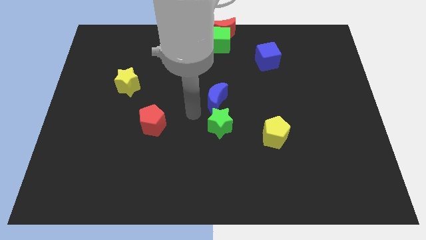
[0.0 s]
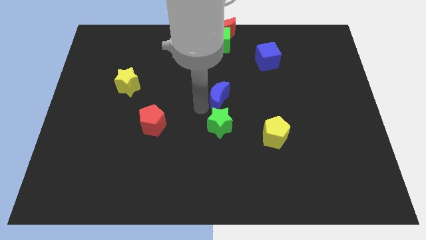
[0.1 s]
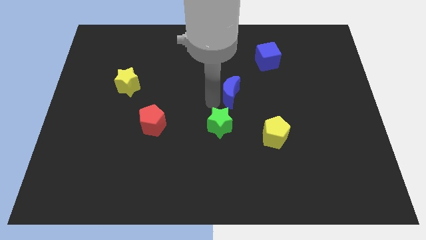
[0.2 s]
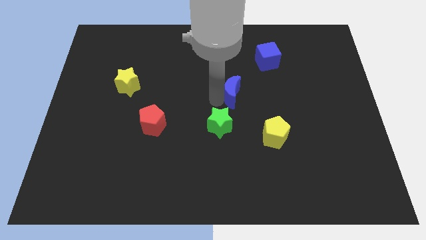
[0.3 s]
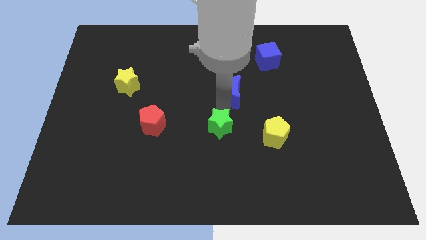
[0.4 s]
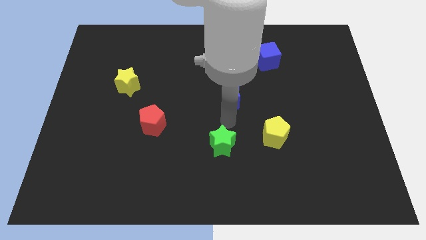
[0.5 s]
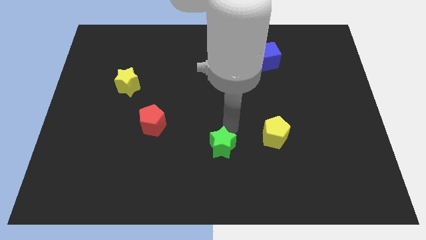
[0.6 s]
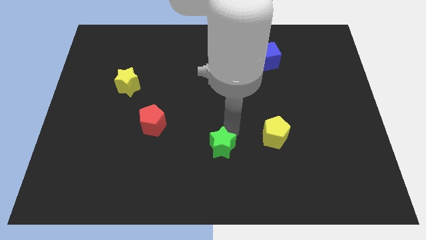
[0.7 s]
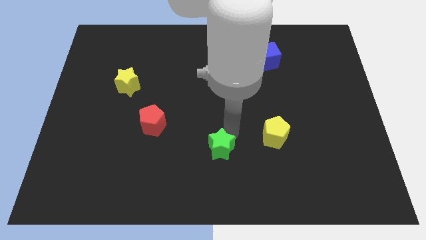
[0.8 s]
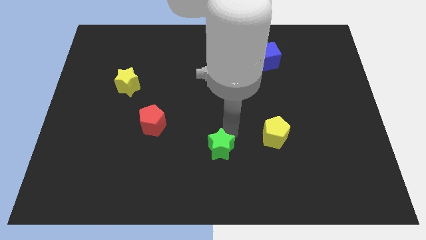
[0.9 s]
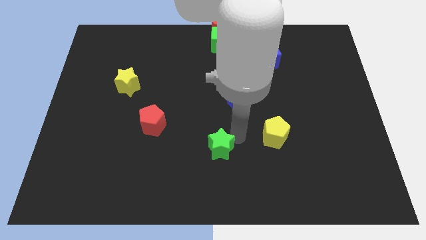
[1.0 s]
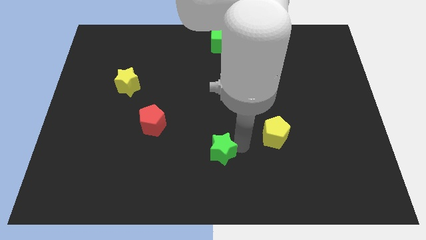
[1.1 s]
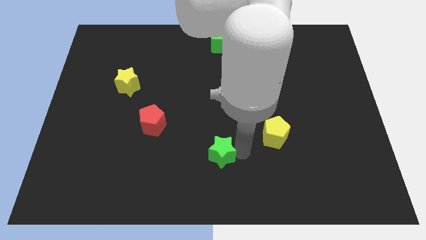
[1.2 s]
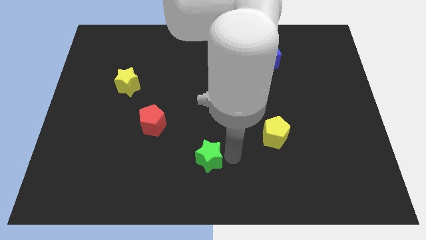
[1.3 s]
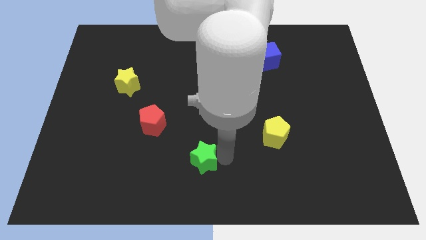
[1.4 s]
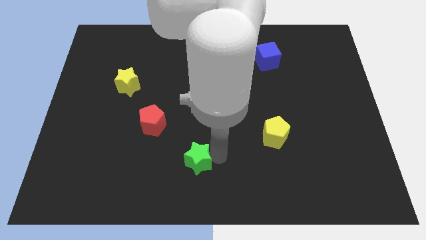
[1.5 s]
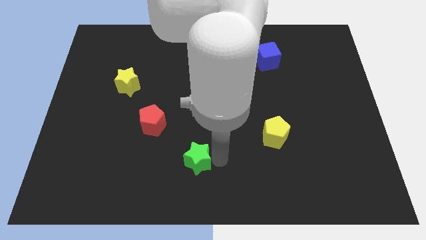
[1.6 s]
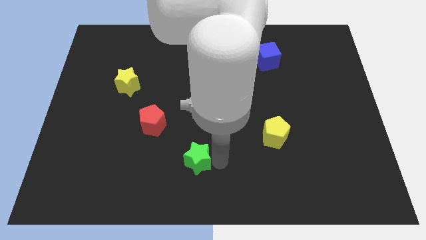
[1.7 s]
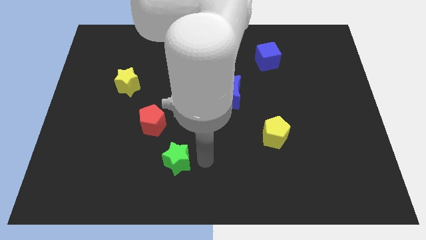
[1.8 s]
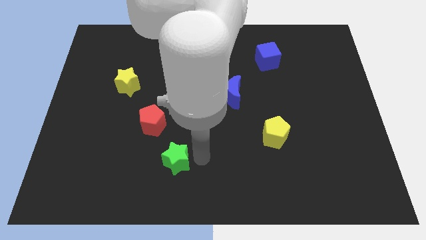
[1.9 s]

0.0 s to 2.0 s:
separate green star and the blue moon

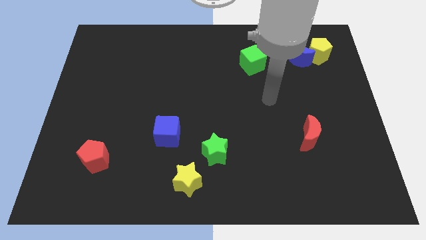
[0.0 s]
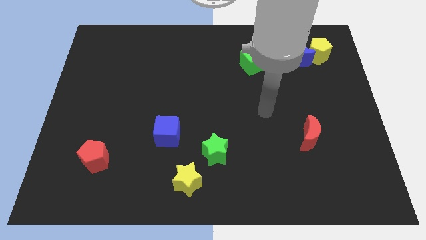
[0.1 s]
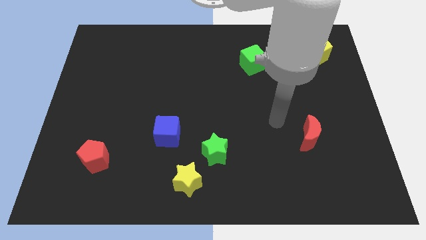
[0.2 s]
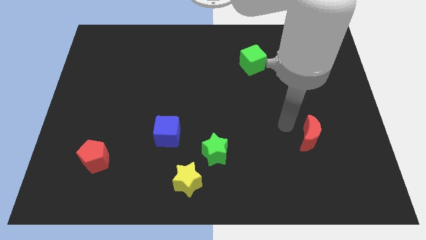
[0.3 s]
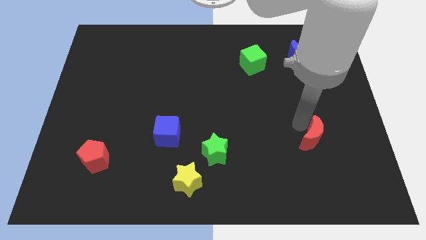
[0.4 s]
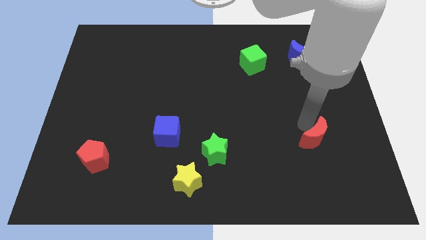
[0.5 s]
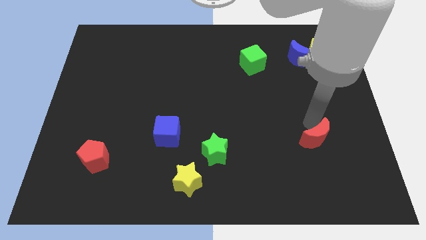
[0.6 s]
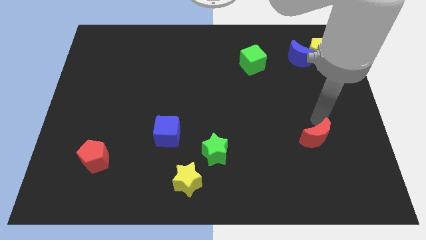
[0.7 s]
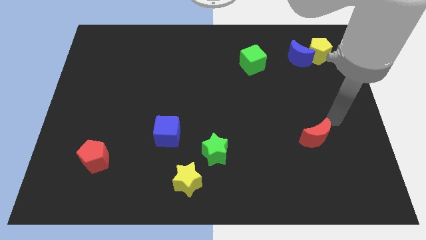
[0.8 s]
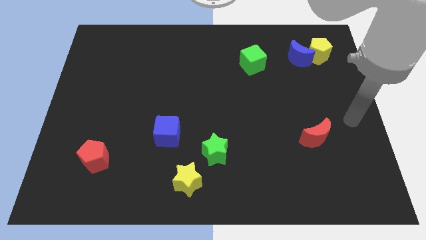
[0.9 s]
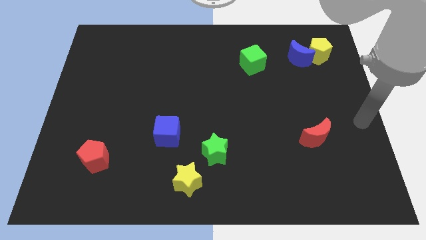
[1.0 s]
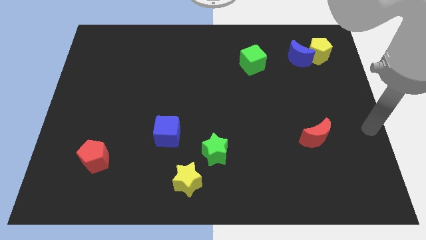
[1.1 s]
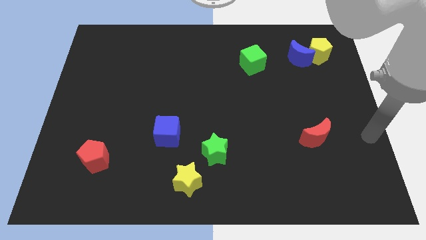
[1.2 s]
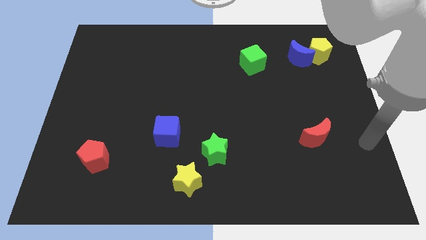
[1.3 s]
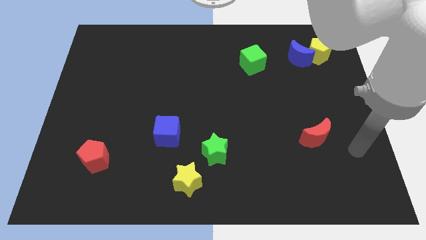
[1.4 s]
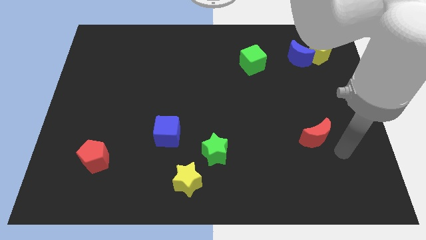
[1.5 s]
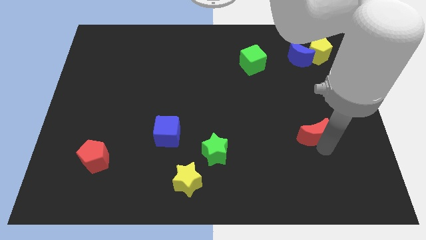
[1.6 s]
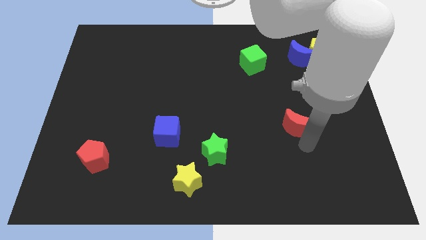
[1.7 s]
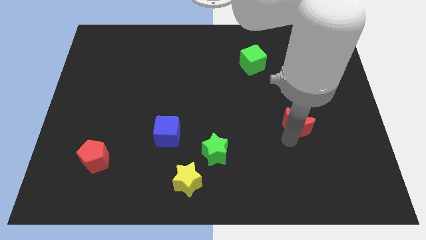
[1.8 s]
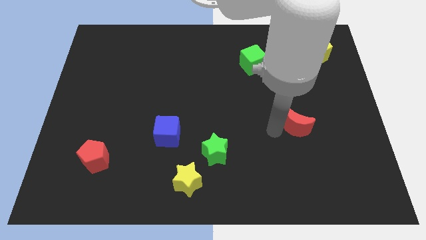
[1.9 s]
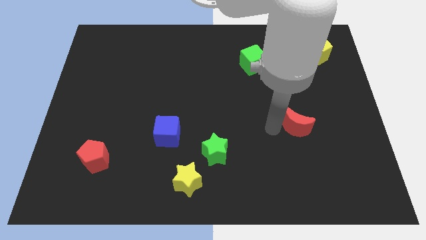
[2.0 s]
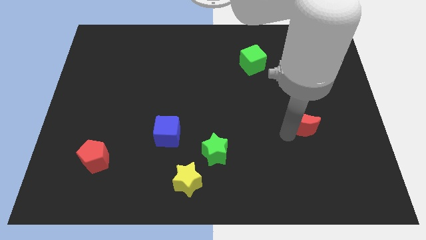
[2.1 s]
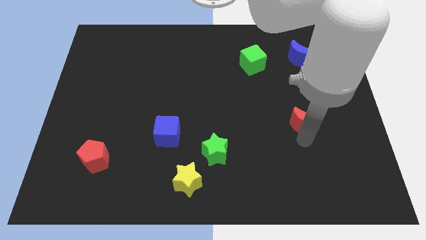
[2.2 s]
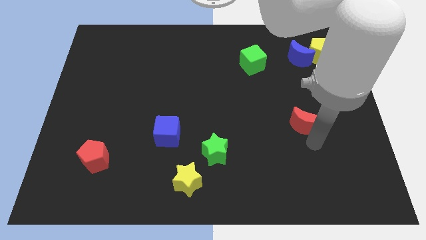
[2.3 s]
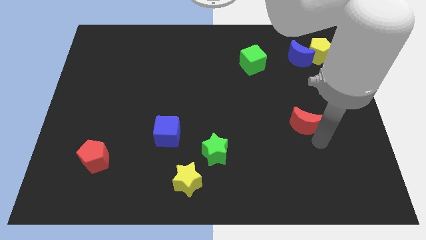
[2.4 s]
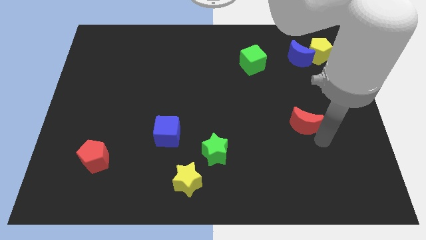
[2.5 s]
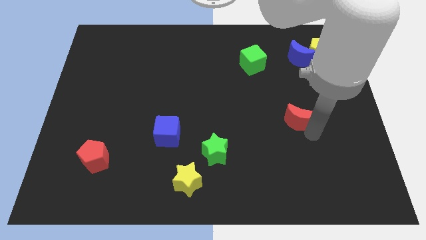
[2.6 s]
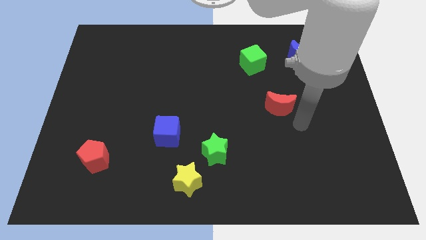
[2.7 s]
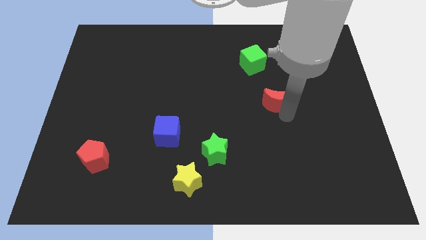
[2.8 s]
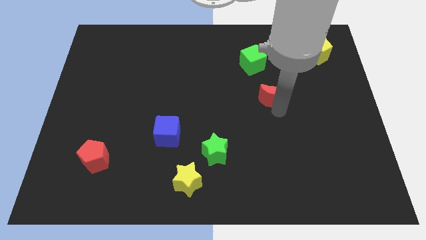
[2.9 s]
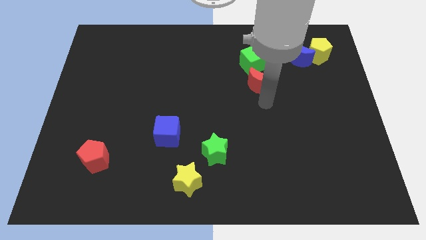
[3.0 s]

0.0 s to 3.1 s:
place the red moon diagonally bottom left to the blue moon

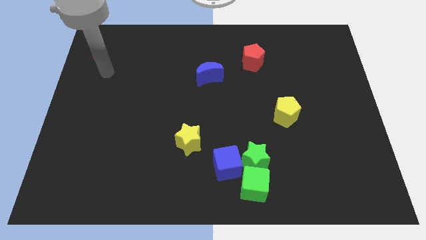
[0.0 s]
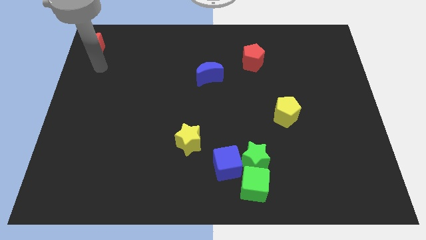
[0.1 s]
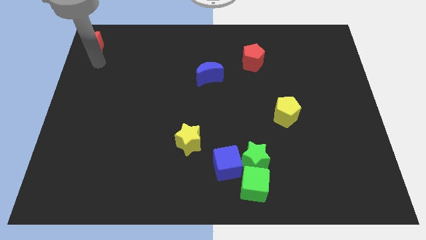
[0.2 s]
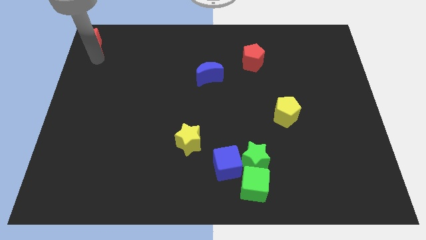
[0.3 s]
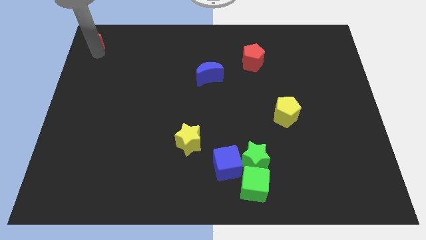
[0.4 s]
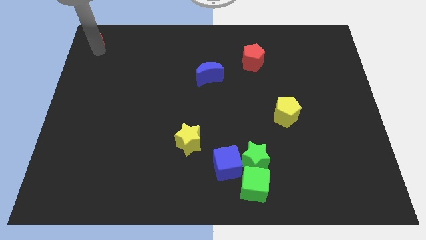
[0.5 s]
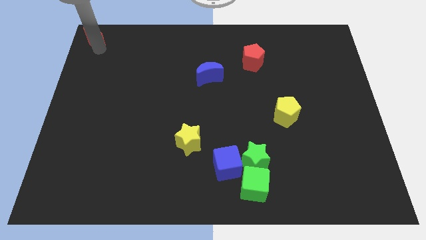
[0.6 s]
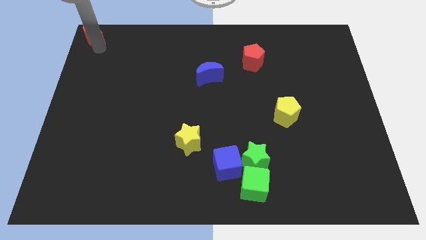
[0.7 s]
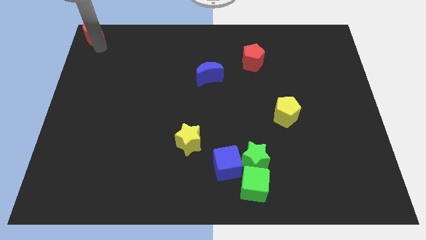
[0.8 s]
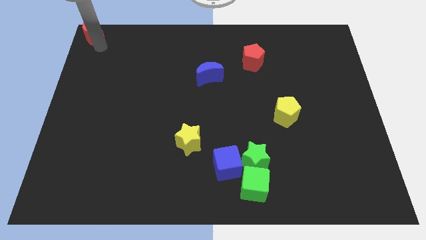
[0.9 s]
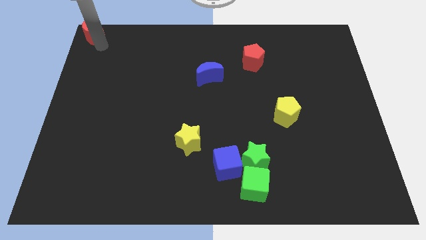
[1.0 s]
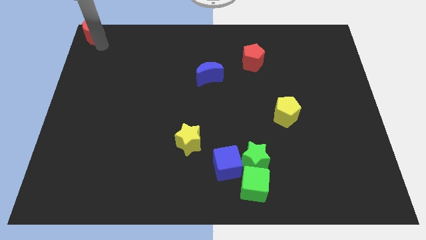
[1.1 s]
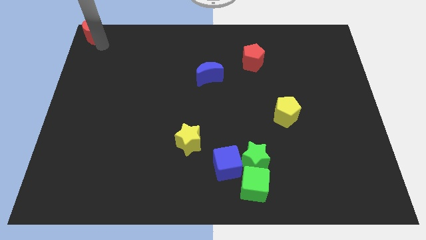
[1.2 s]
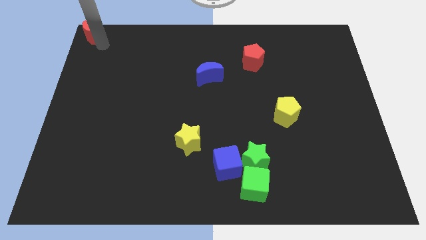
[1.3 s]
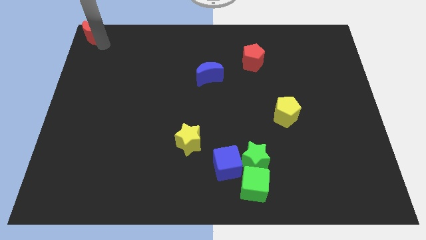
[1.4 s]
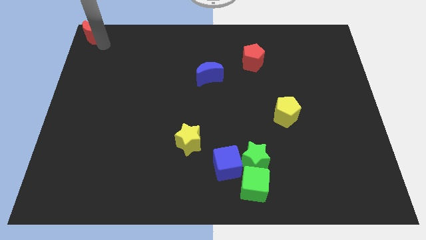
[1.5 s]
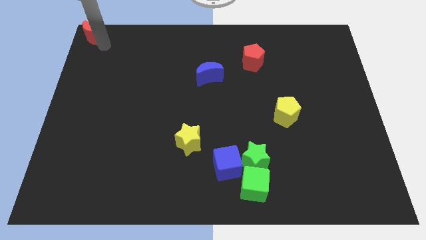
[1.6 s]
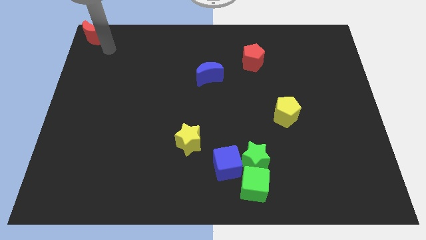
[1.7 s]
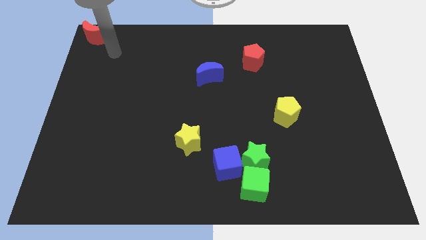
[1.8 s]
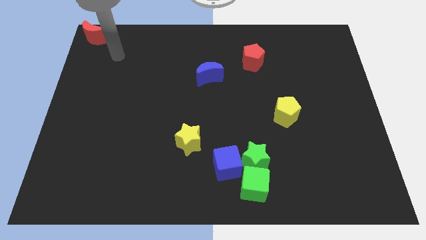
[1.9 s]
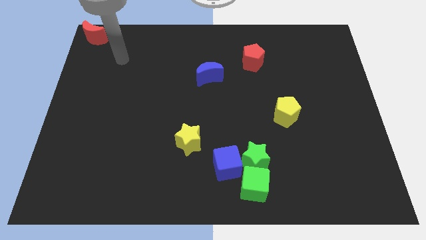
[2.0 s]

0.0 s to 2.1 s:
place red moon in the top left corner

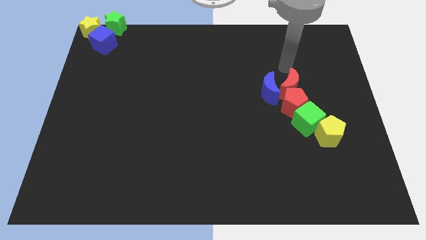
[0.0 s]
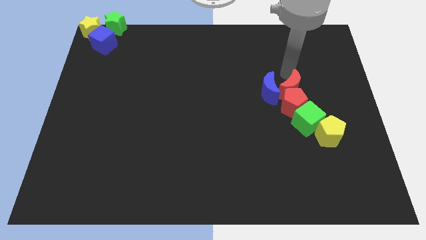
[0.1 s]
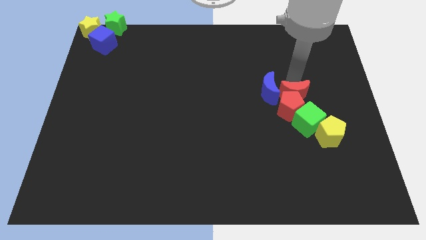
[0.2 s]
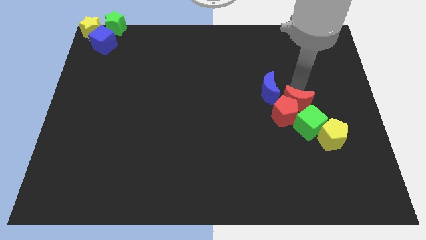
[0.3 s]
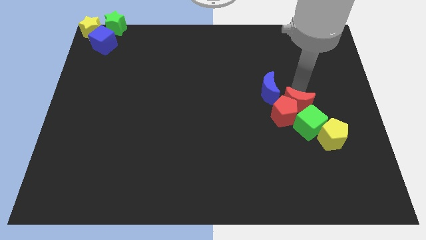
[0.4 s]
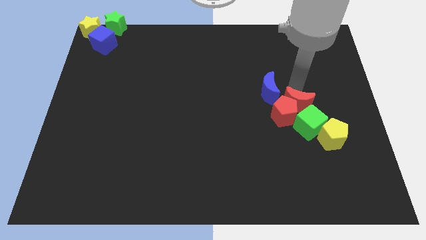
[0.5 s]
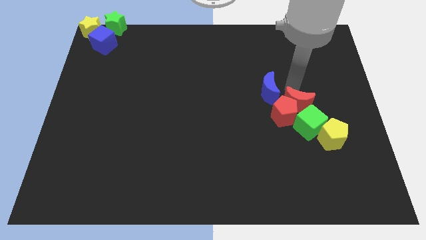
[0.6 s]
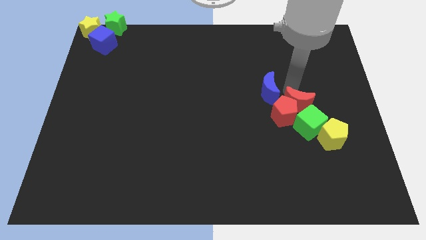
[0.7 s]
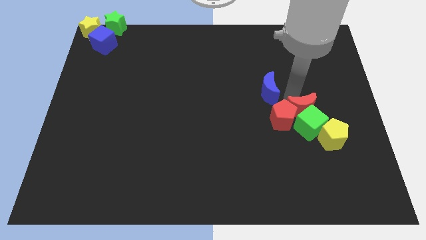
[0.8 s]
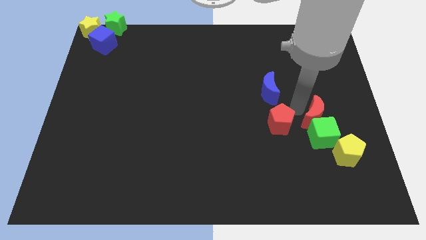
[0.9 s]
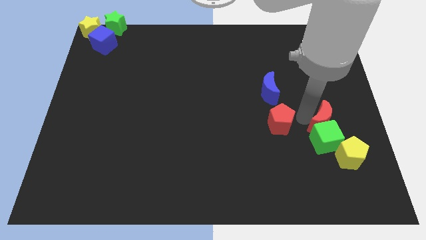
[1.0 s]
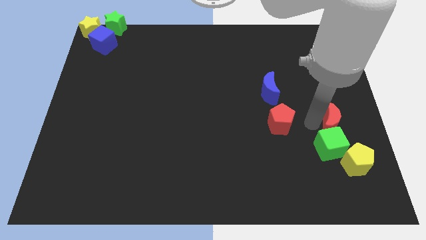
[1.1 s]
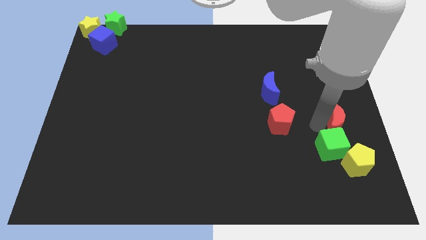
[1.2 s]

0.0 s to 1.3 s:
push red moon to the top of the green cube

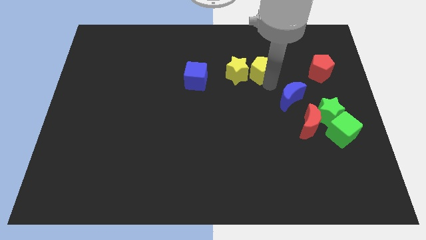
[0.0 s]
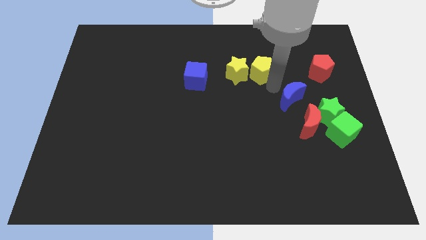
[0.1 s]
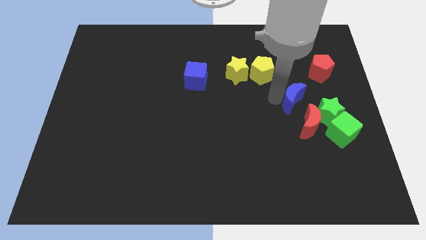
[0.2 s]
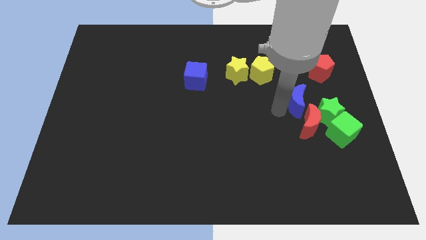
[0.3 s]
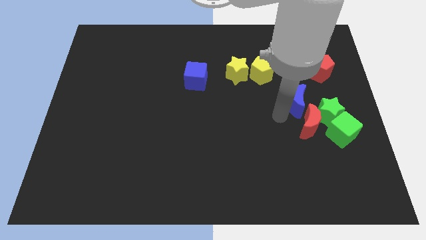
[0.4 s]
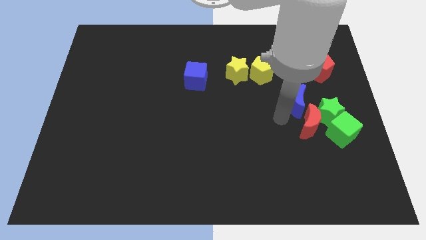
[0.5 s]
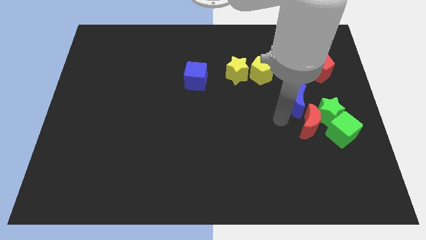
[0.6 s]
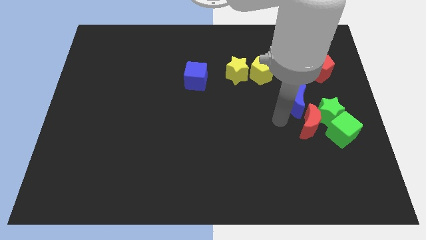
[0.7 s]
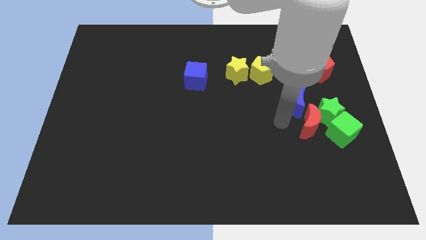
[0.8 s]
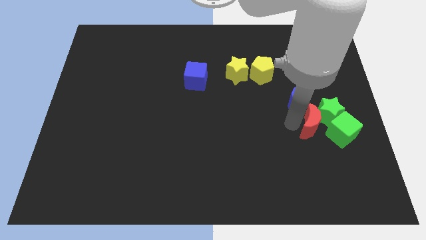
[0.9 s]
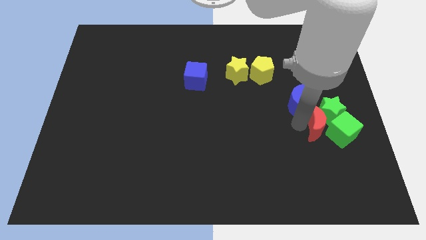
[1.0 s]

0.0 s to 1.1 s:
move the blue crescent slightly
